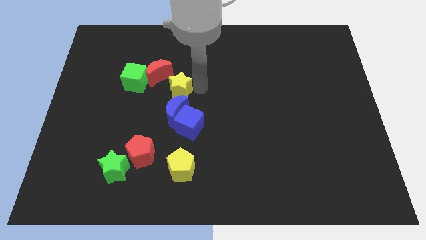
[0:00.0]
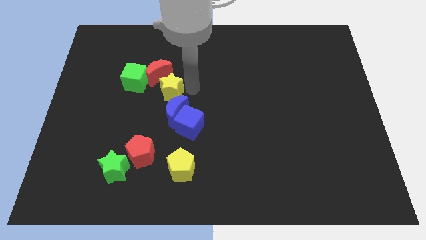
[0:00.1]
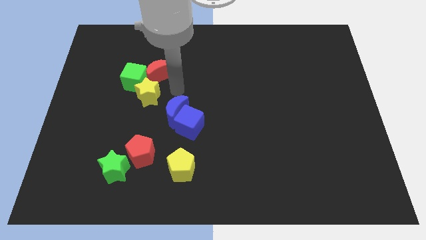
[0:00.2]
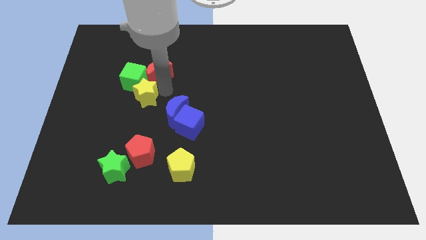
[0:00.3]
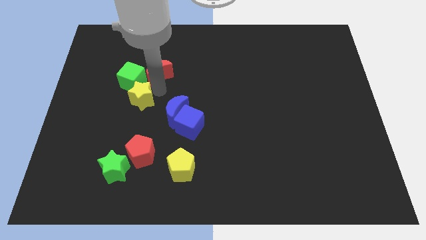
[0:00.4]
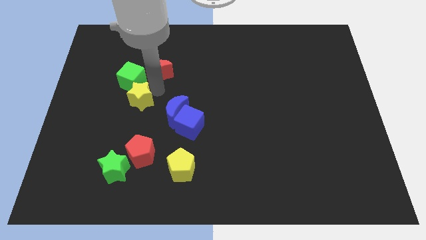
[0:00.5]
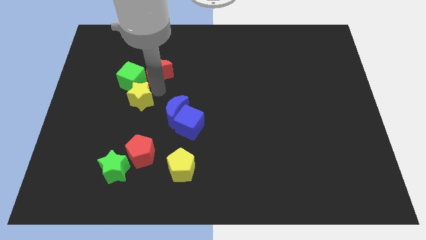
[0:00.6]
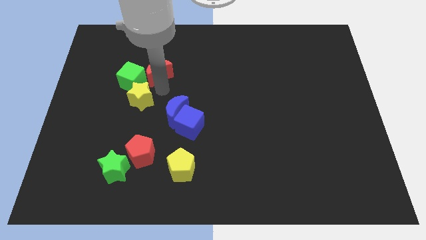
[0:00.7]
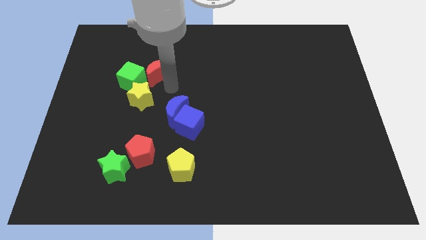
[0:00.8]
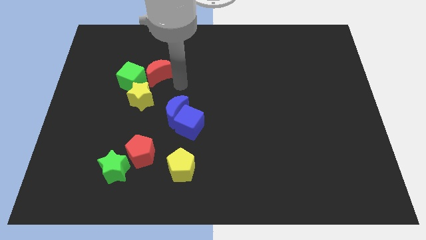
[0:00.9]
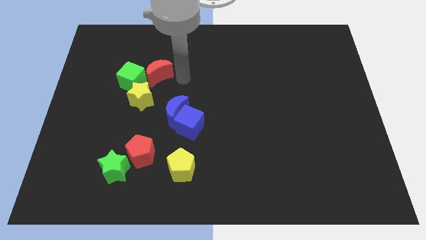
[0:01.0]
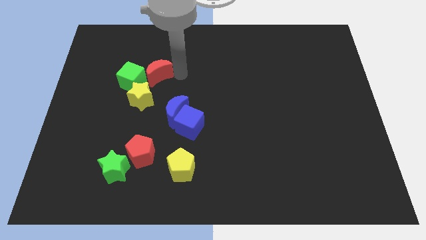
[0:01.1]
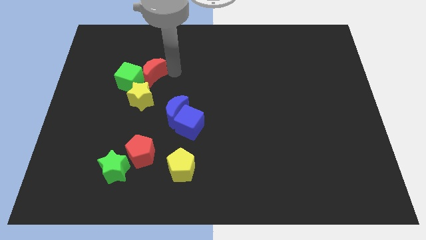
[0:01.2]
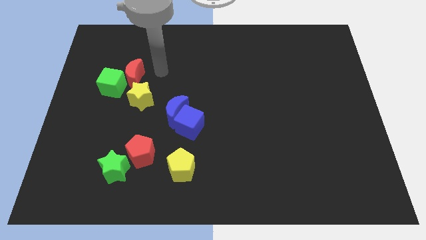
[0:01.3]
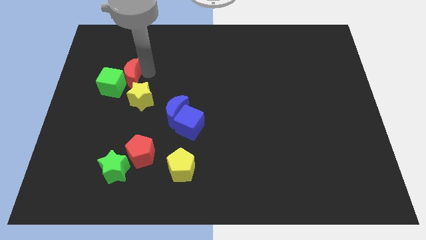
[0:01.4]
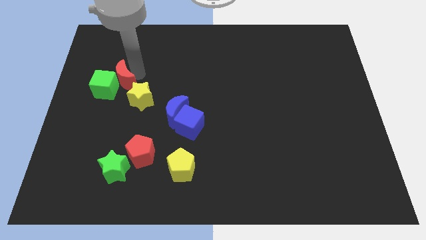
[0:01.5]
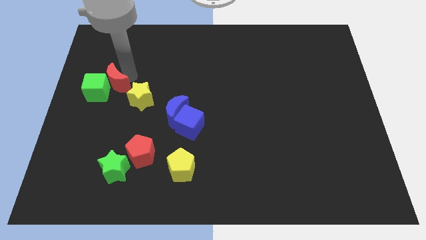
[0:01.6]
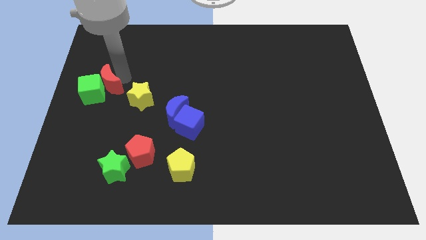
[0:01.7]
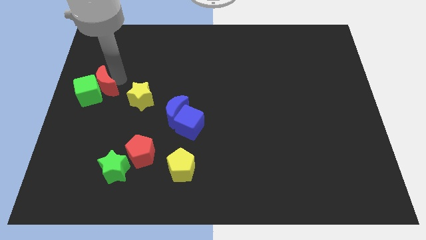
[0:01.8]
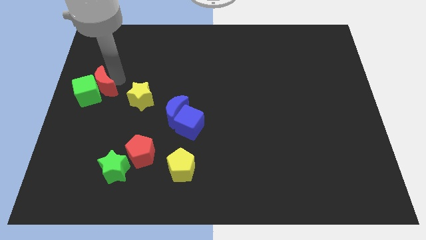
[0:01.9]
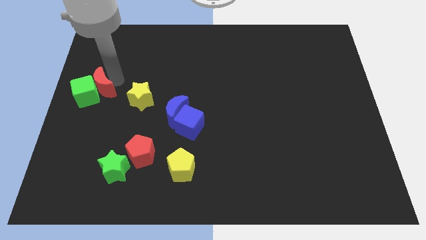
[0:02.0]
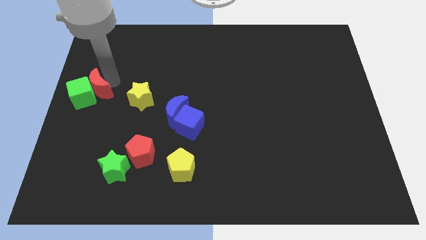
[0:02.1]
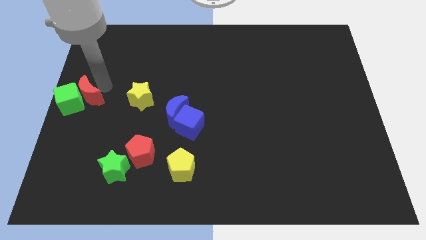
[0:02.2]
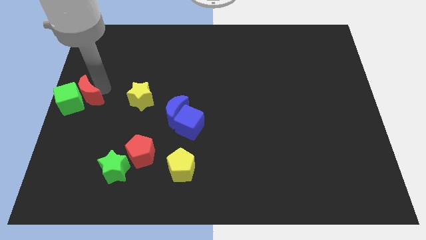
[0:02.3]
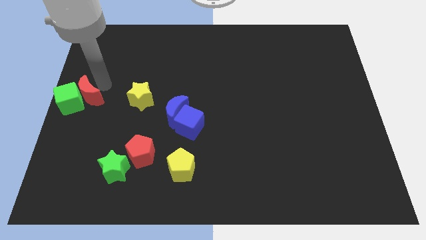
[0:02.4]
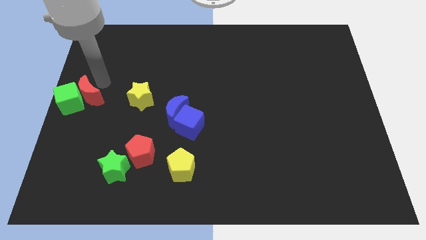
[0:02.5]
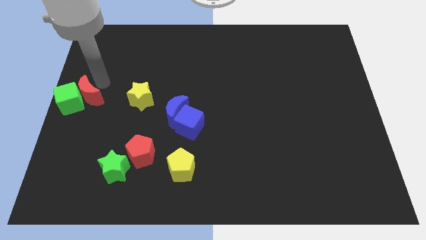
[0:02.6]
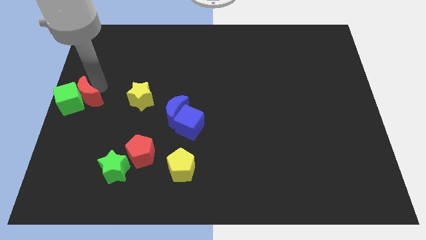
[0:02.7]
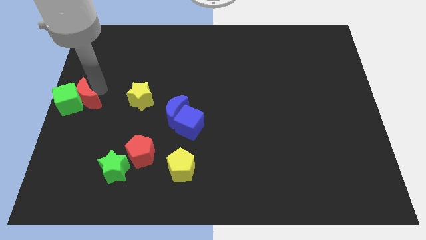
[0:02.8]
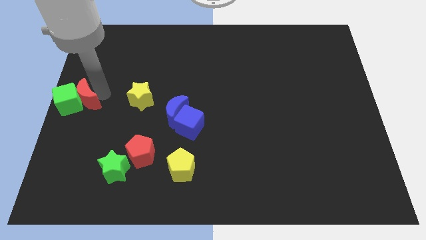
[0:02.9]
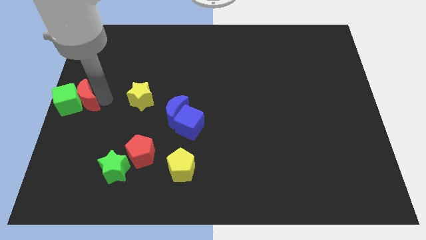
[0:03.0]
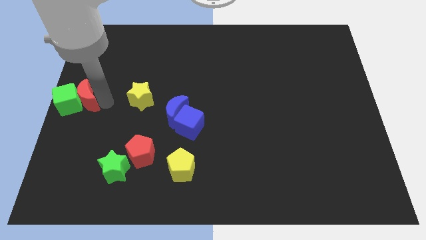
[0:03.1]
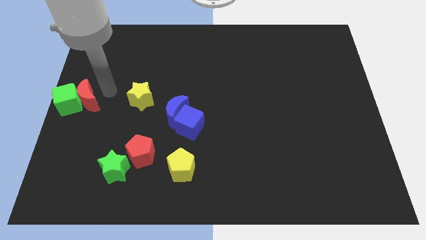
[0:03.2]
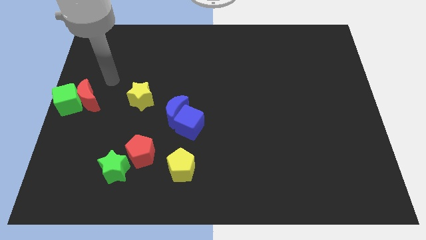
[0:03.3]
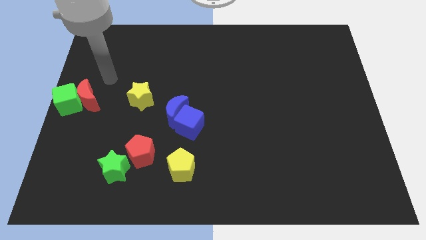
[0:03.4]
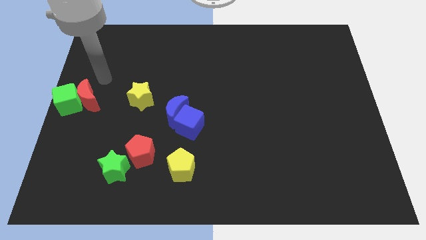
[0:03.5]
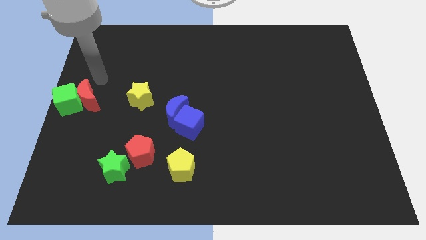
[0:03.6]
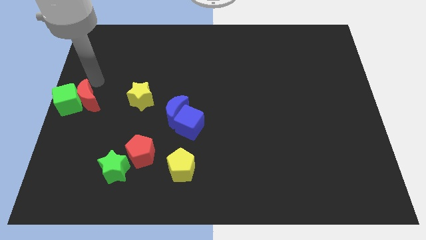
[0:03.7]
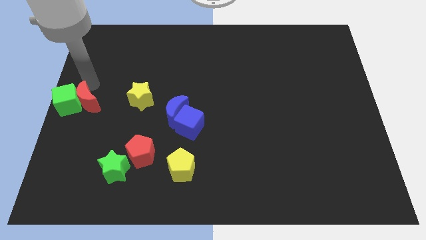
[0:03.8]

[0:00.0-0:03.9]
slide the red moon and green cube to the center left

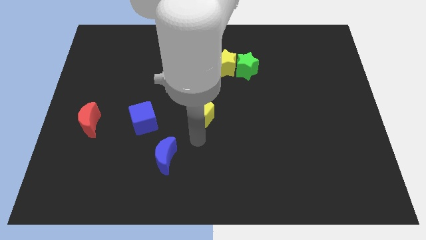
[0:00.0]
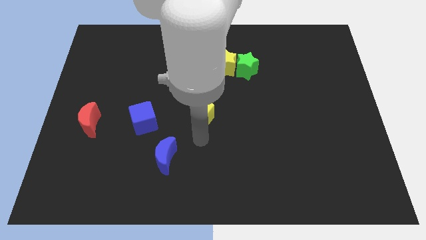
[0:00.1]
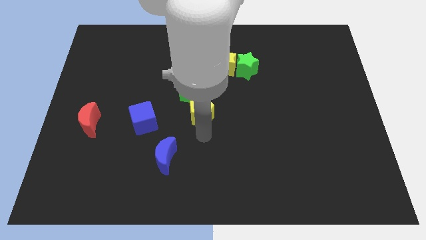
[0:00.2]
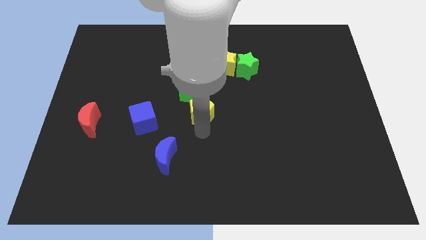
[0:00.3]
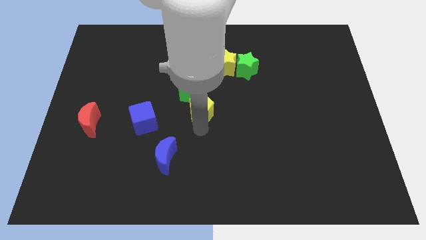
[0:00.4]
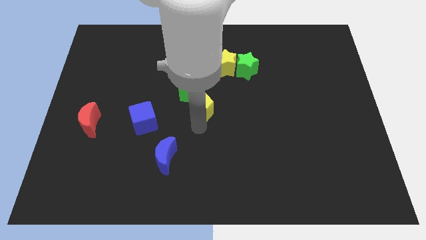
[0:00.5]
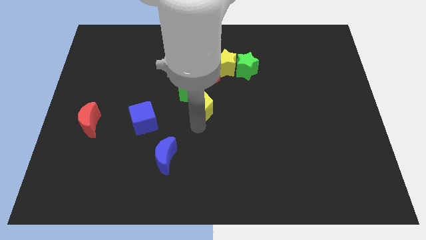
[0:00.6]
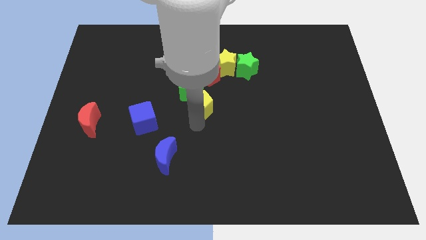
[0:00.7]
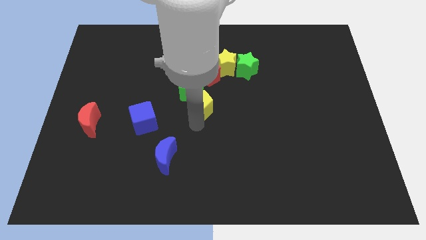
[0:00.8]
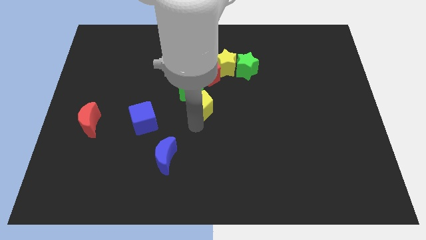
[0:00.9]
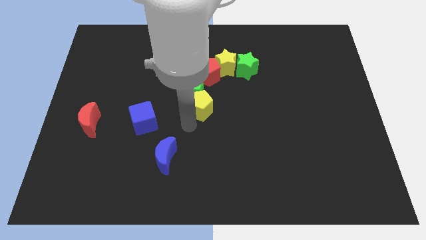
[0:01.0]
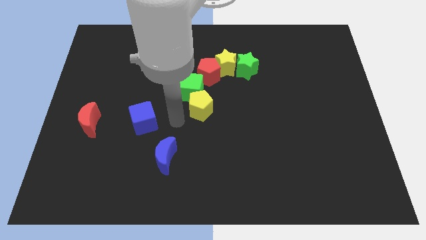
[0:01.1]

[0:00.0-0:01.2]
push the yellow pentagon to the center of the board

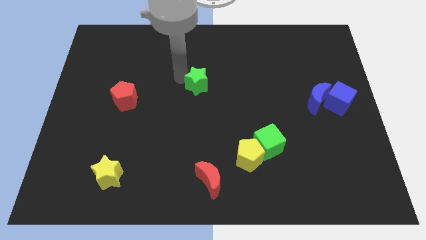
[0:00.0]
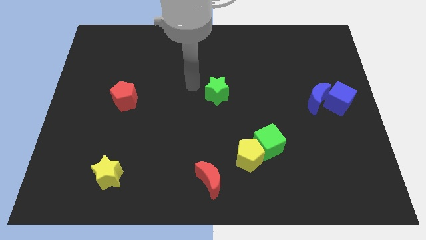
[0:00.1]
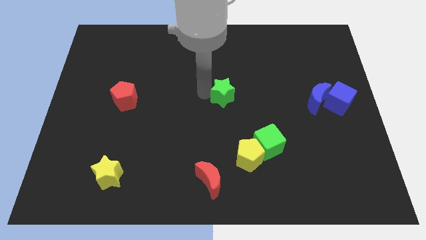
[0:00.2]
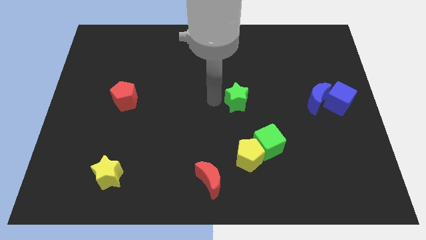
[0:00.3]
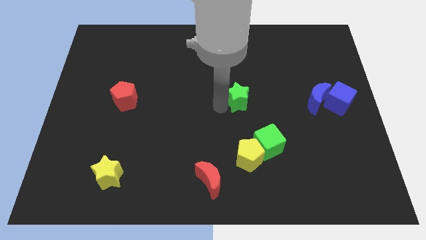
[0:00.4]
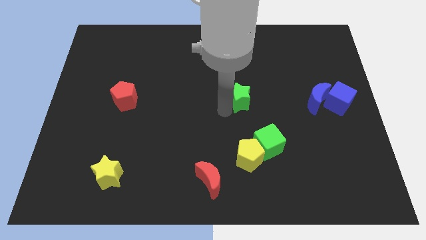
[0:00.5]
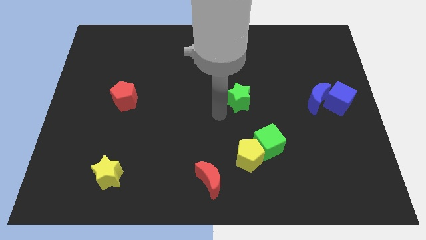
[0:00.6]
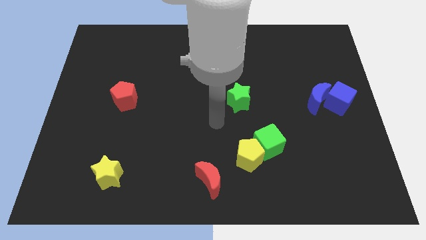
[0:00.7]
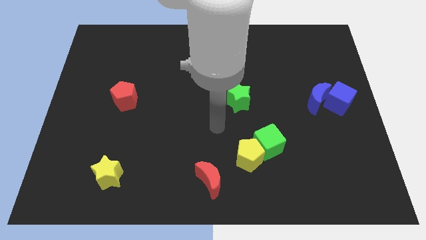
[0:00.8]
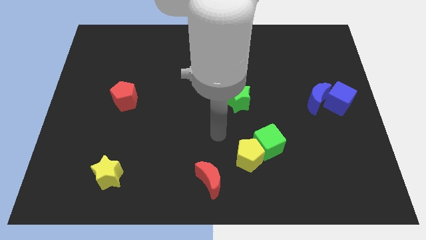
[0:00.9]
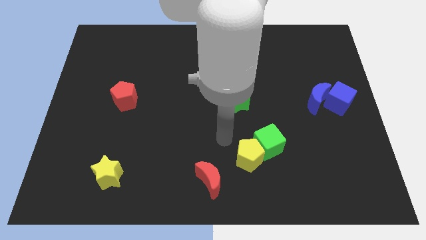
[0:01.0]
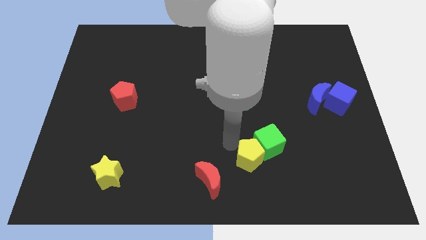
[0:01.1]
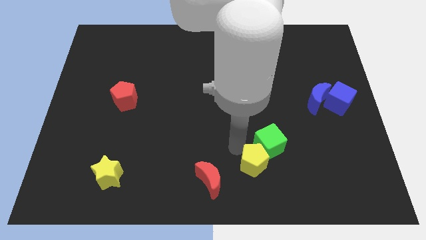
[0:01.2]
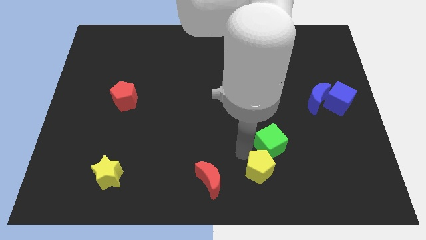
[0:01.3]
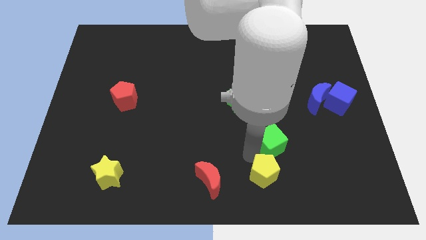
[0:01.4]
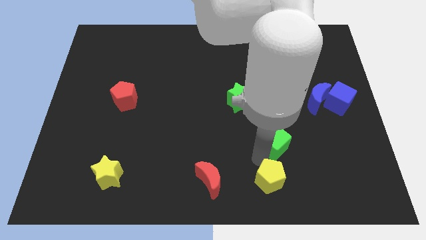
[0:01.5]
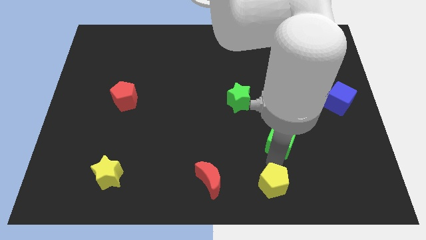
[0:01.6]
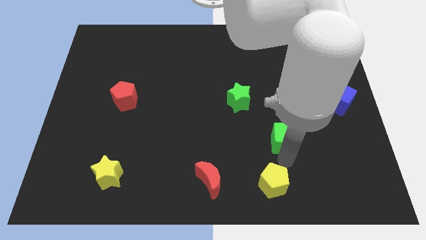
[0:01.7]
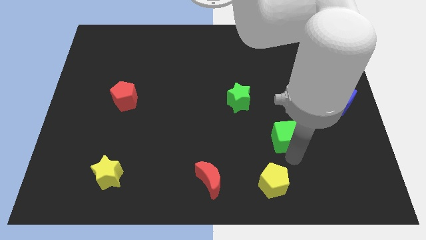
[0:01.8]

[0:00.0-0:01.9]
separate yellow pentagon from the green cube

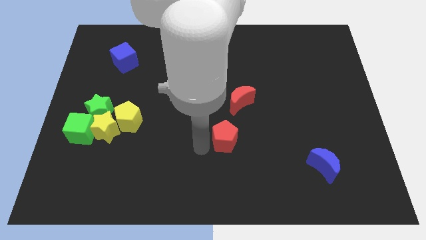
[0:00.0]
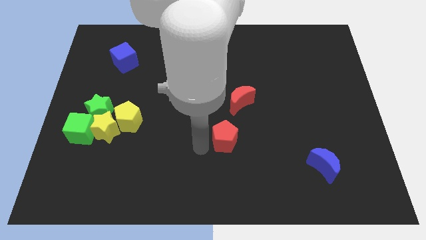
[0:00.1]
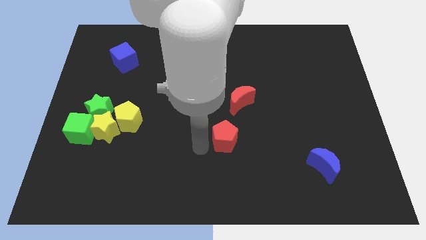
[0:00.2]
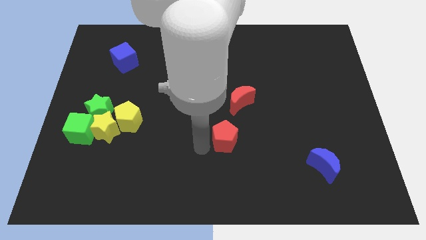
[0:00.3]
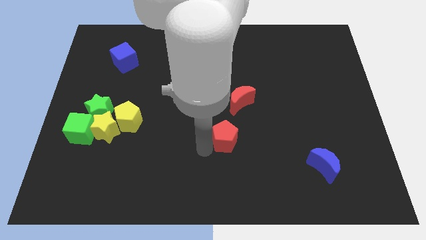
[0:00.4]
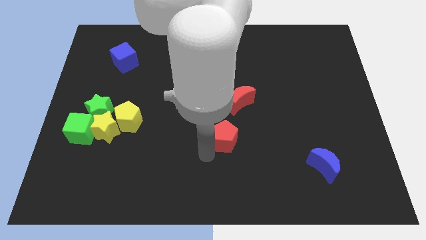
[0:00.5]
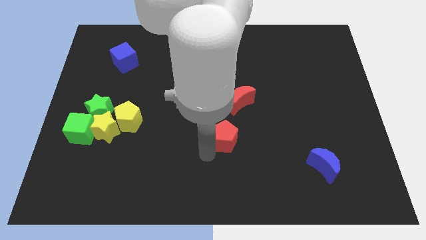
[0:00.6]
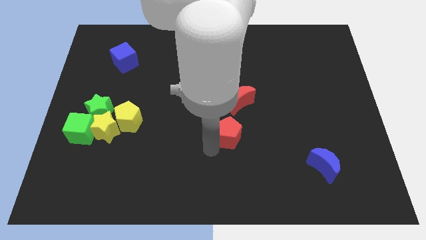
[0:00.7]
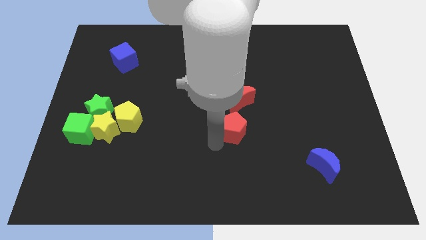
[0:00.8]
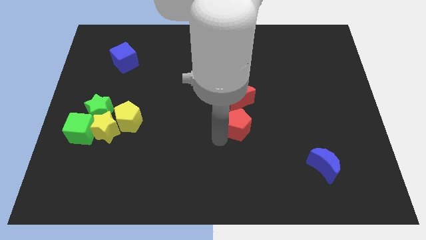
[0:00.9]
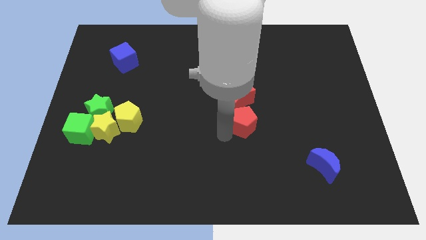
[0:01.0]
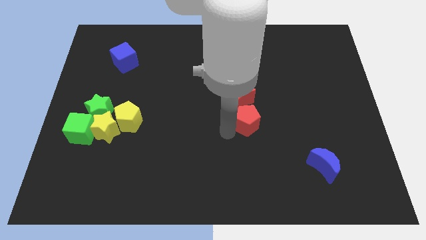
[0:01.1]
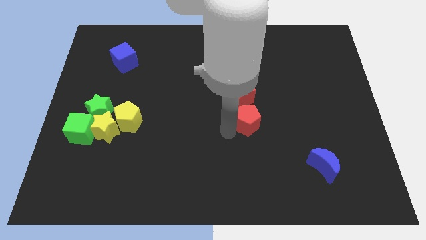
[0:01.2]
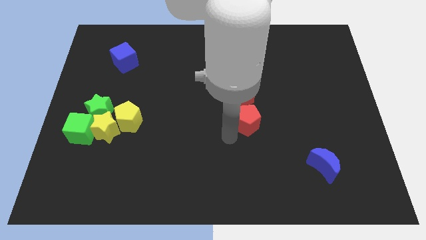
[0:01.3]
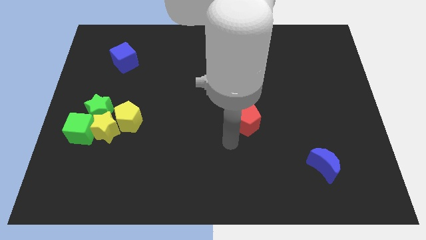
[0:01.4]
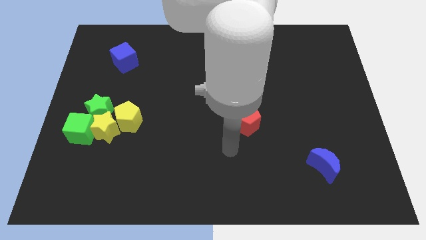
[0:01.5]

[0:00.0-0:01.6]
push the red pentagon towards the red crescent

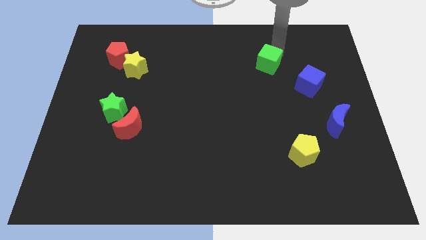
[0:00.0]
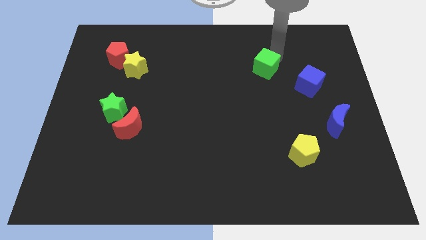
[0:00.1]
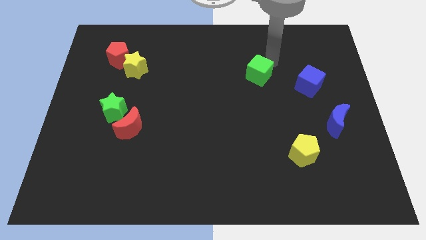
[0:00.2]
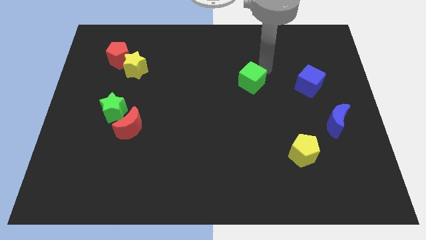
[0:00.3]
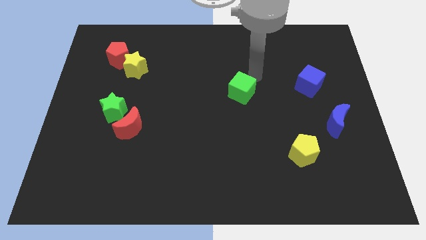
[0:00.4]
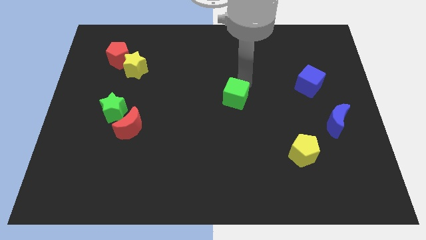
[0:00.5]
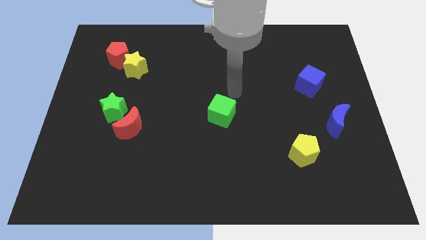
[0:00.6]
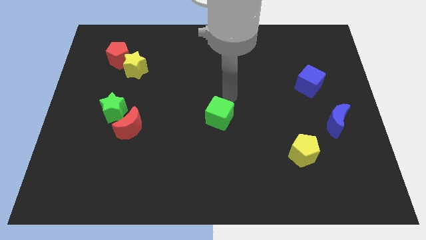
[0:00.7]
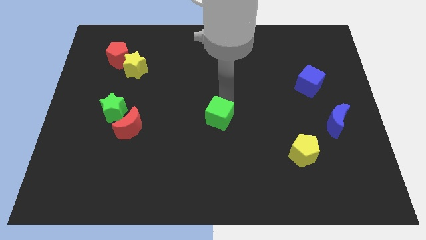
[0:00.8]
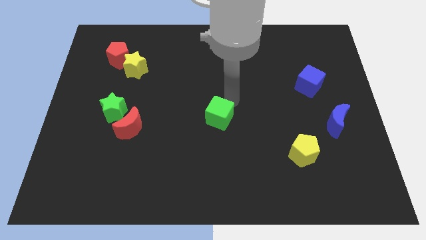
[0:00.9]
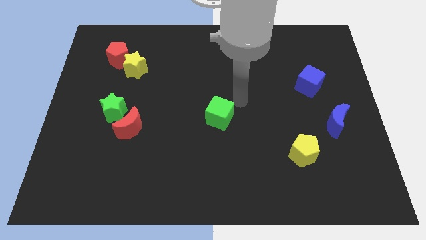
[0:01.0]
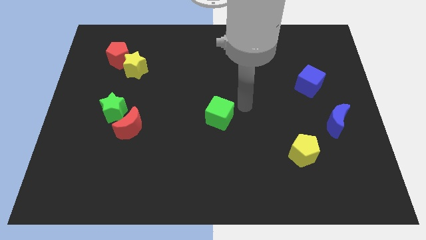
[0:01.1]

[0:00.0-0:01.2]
push the green cube towards the center of the board
